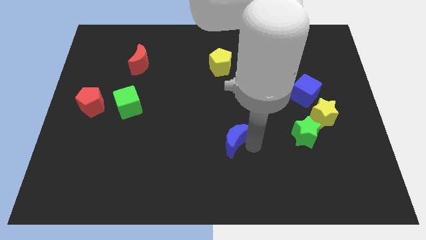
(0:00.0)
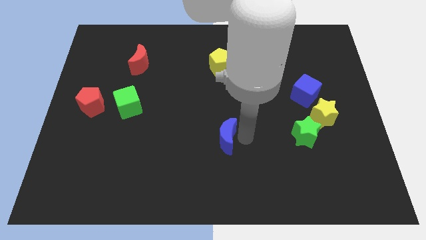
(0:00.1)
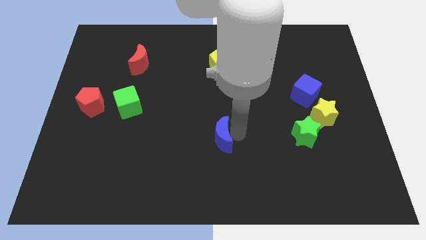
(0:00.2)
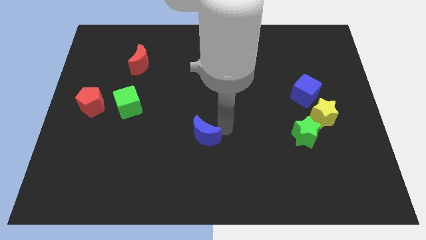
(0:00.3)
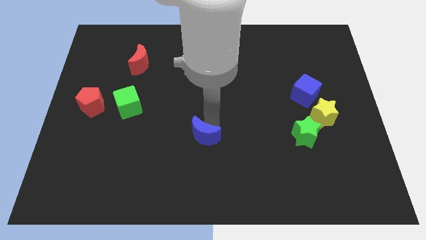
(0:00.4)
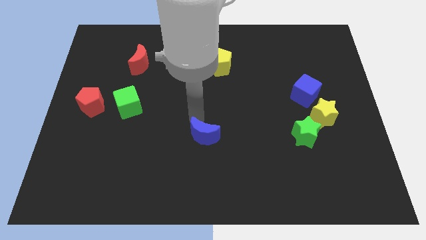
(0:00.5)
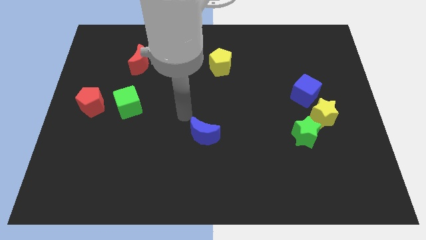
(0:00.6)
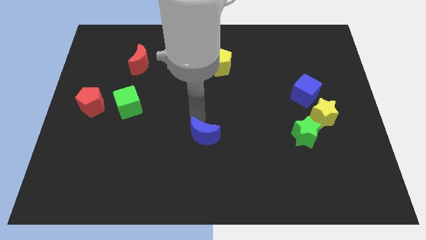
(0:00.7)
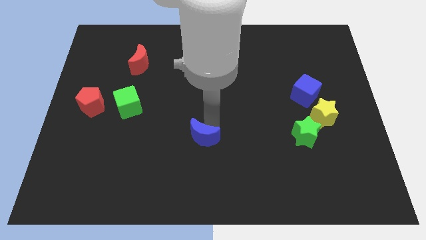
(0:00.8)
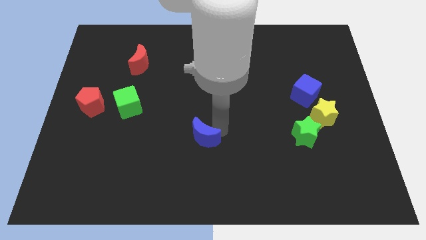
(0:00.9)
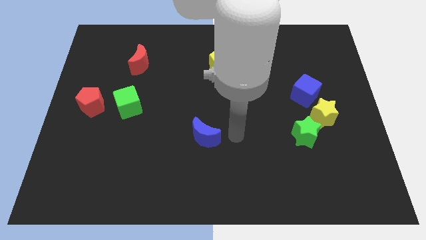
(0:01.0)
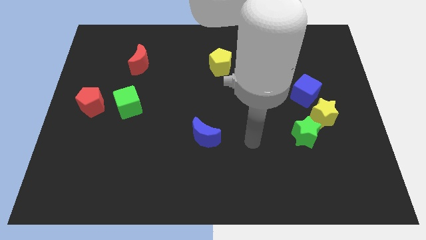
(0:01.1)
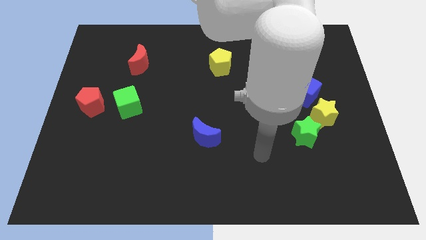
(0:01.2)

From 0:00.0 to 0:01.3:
push the blue crescent slightly to the left

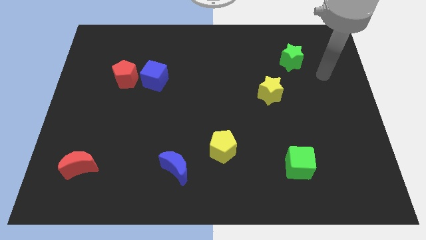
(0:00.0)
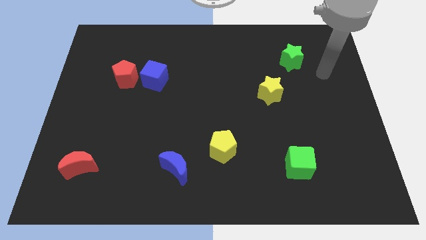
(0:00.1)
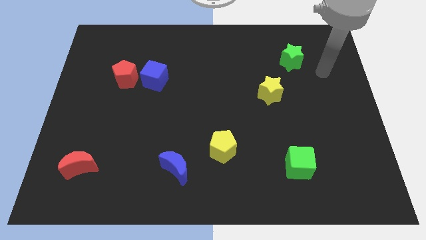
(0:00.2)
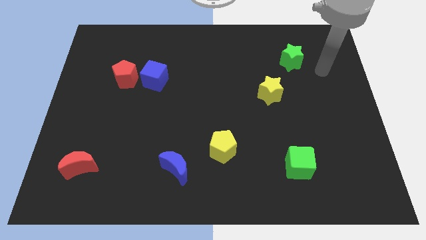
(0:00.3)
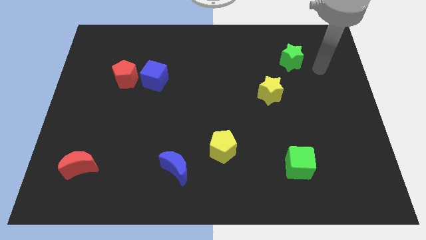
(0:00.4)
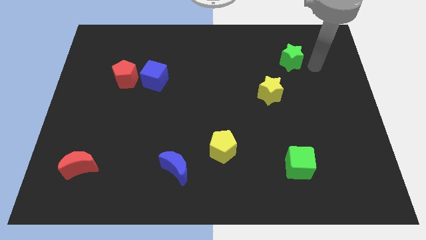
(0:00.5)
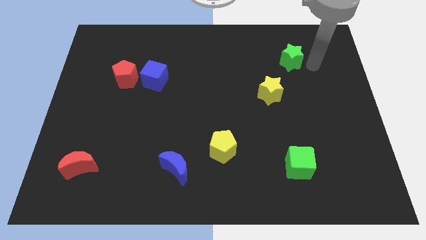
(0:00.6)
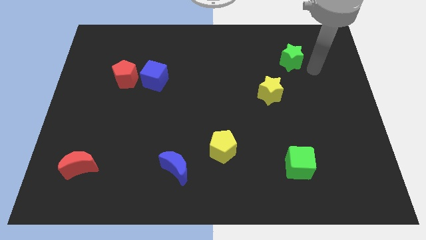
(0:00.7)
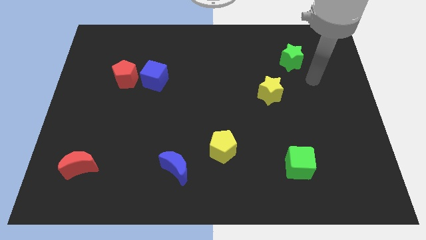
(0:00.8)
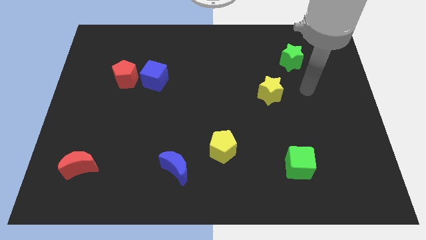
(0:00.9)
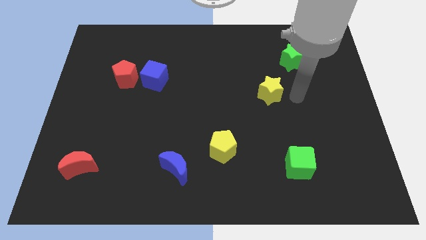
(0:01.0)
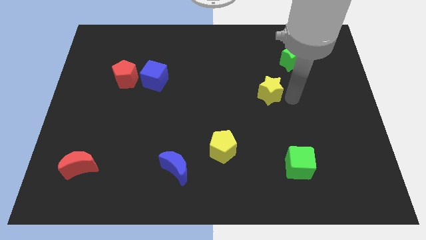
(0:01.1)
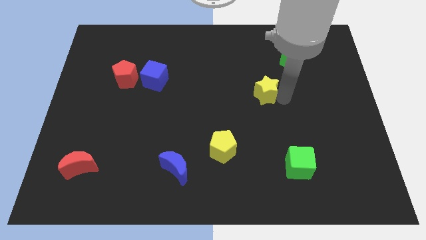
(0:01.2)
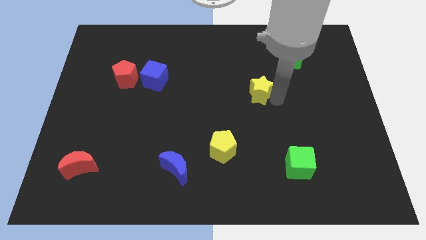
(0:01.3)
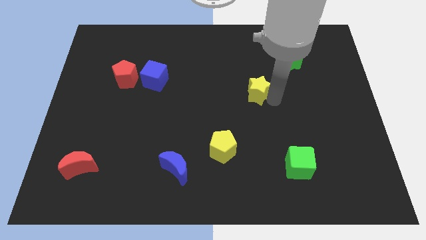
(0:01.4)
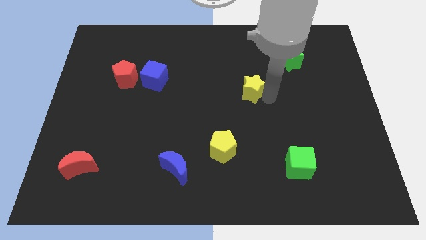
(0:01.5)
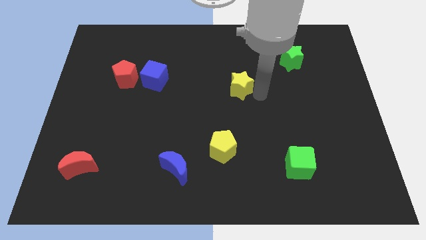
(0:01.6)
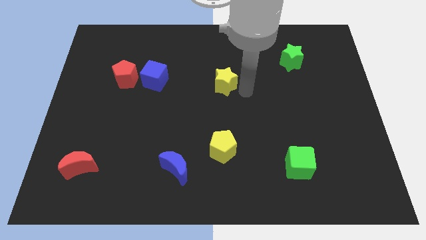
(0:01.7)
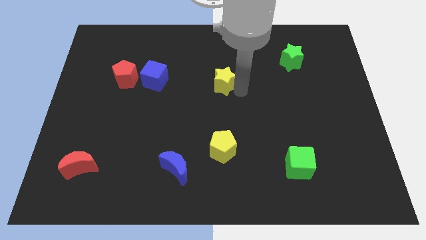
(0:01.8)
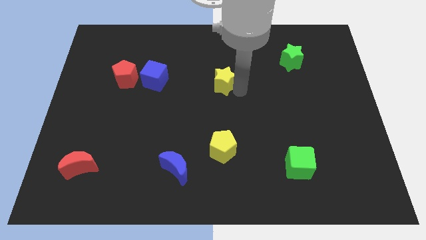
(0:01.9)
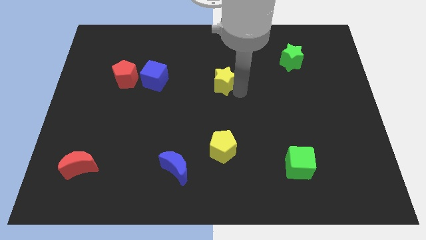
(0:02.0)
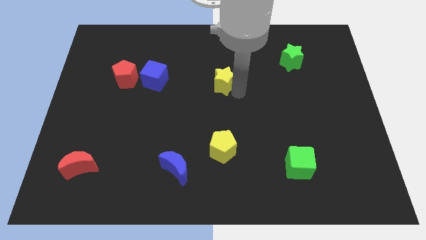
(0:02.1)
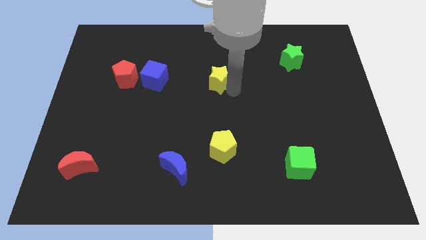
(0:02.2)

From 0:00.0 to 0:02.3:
move the yellow star above yellow pentagon

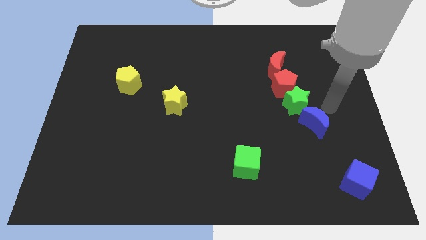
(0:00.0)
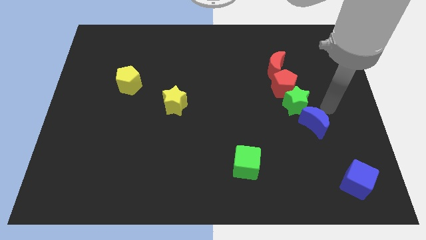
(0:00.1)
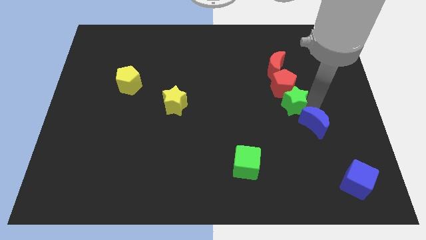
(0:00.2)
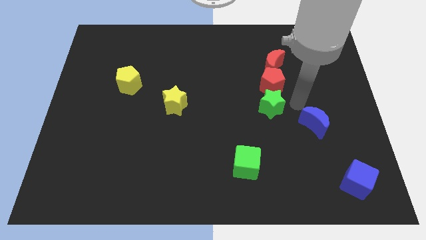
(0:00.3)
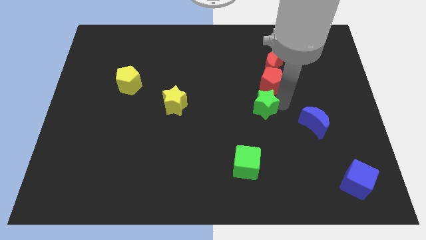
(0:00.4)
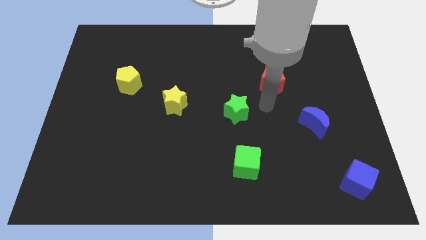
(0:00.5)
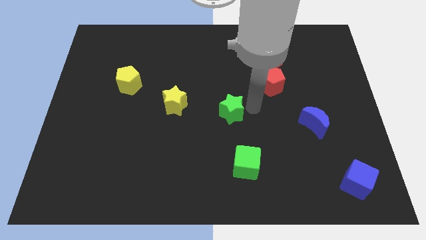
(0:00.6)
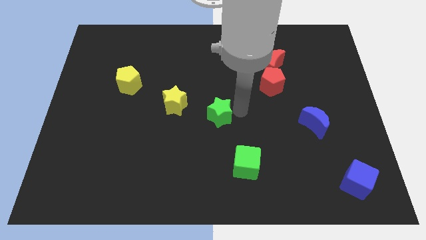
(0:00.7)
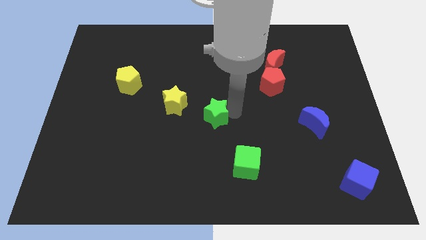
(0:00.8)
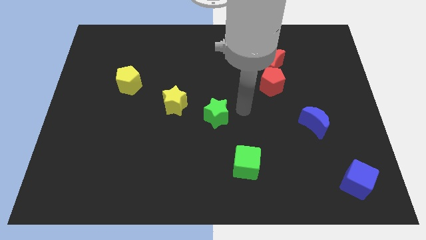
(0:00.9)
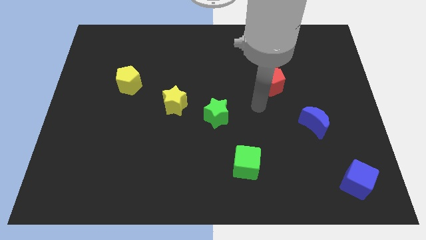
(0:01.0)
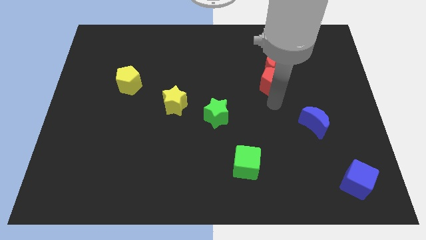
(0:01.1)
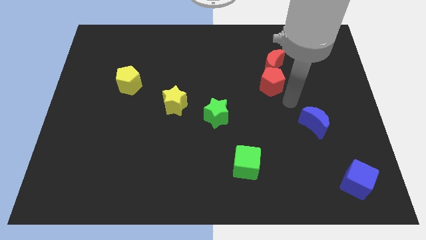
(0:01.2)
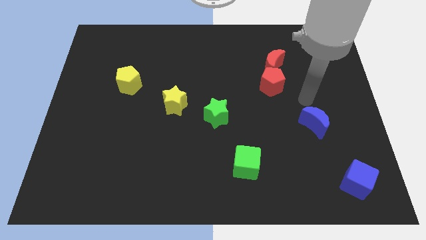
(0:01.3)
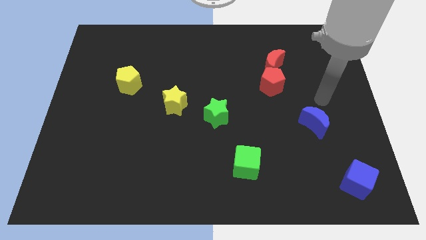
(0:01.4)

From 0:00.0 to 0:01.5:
move the green star to the right side of the yellow star

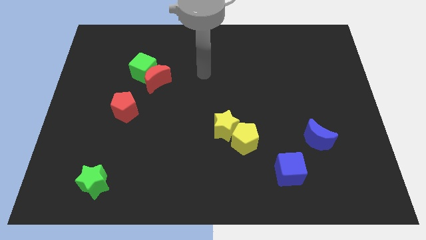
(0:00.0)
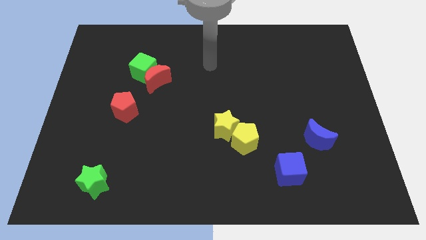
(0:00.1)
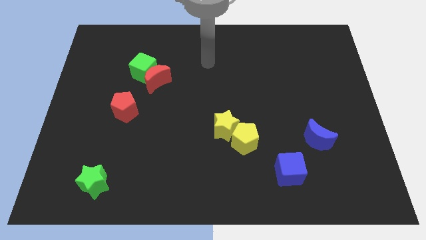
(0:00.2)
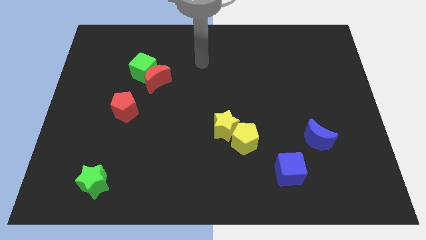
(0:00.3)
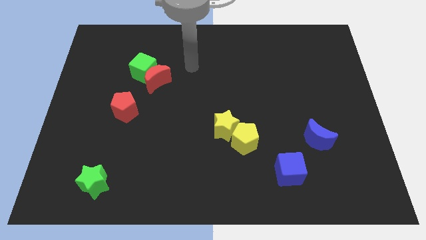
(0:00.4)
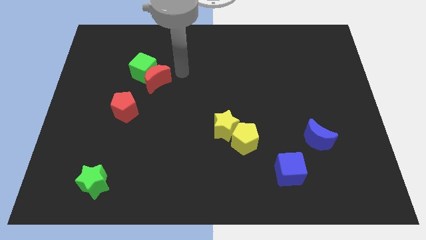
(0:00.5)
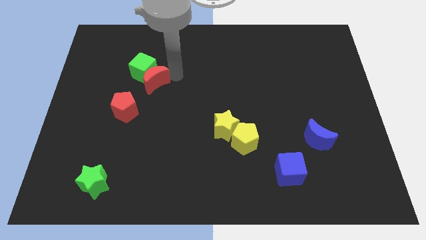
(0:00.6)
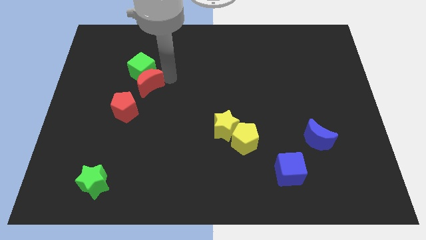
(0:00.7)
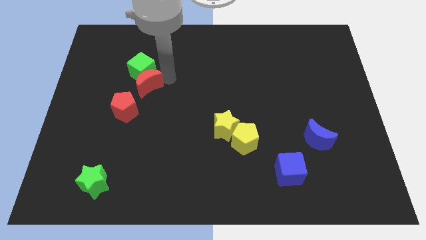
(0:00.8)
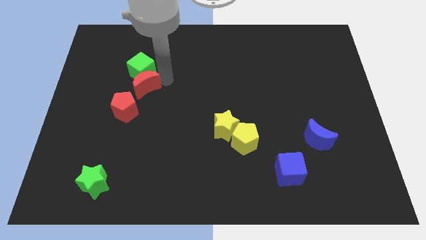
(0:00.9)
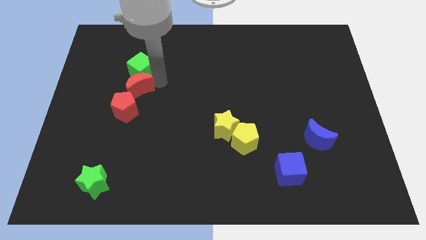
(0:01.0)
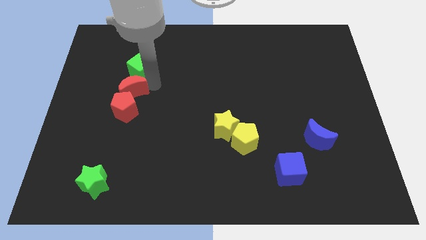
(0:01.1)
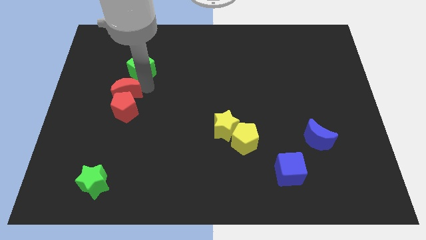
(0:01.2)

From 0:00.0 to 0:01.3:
place the red crescent diagonally in between the green cube and red pentagon

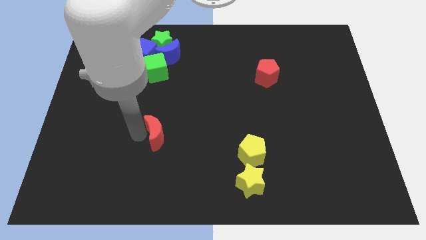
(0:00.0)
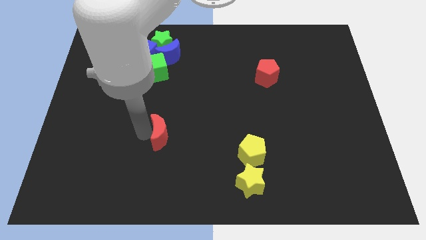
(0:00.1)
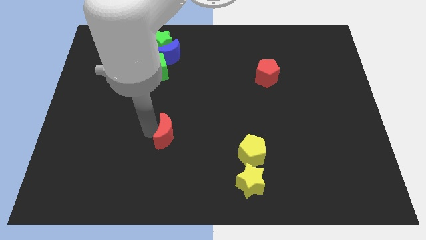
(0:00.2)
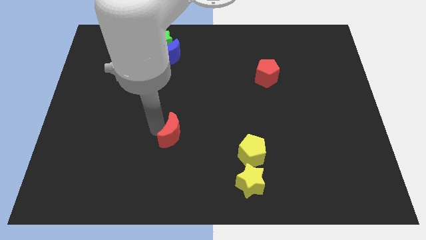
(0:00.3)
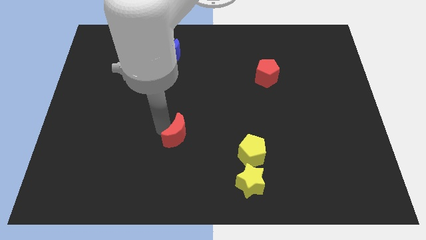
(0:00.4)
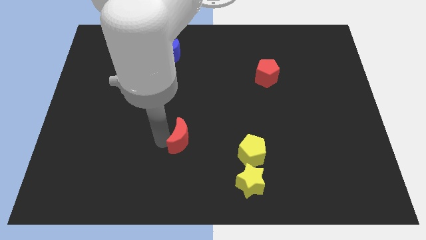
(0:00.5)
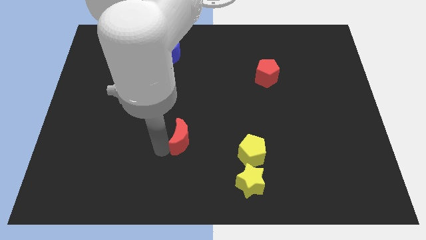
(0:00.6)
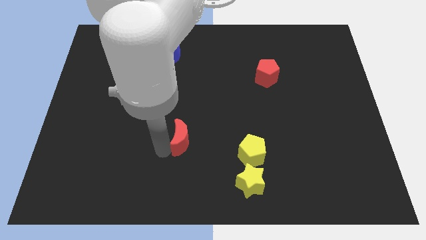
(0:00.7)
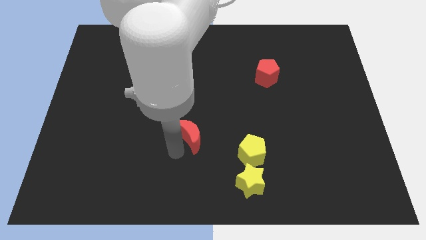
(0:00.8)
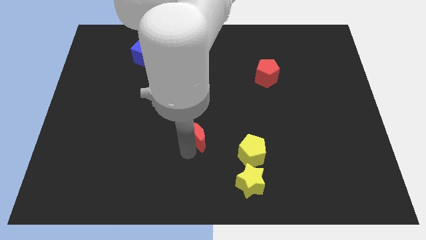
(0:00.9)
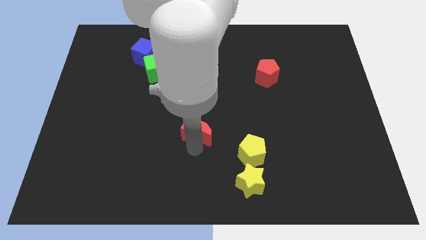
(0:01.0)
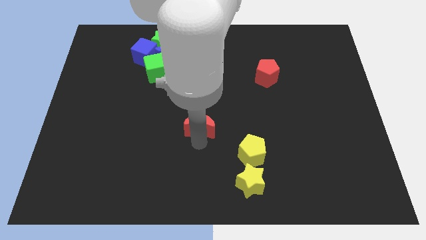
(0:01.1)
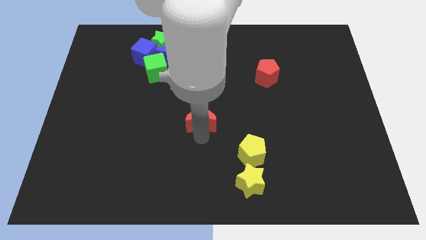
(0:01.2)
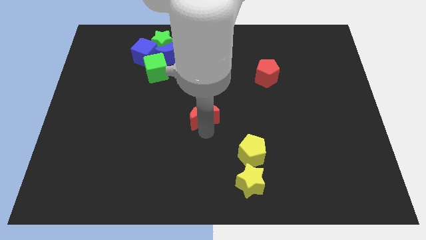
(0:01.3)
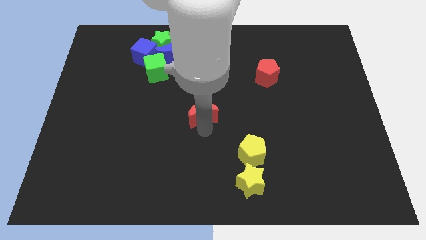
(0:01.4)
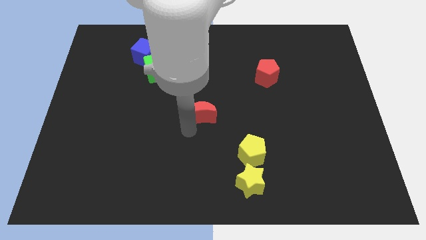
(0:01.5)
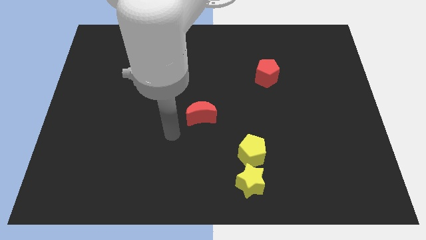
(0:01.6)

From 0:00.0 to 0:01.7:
move the red moon slightly towards the center

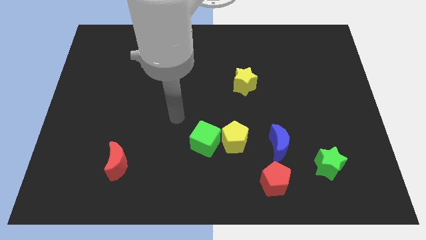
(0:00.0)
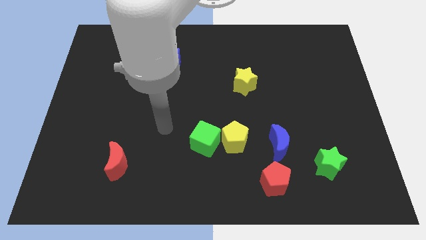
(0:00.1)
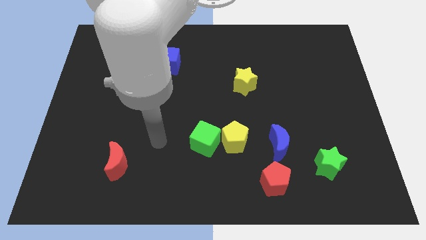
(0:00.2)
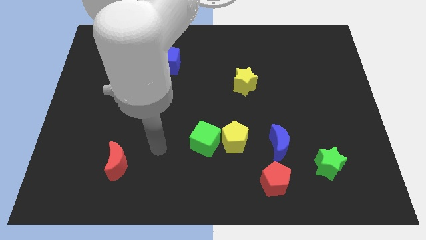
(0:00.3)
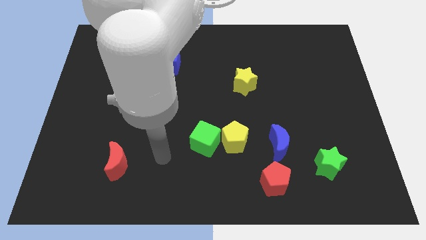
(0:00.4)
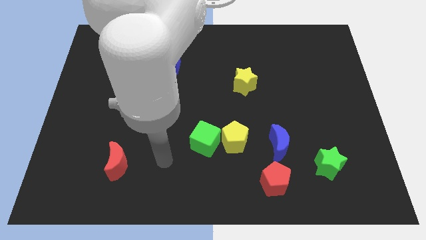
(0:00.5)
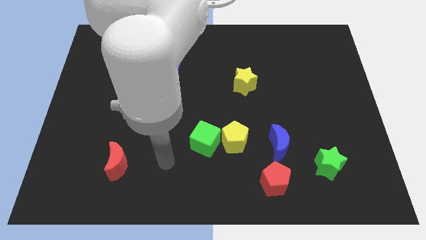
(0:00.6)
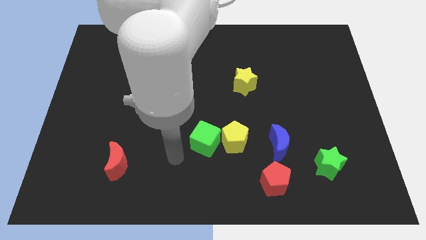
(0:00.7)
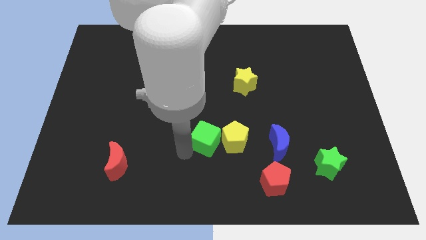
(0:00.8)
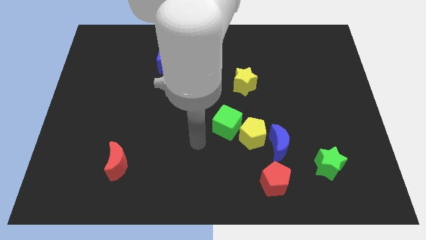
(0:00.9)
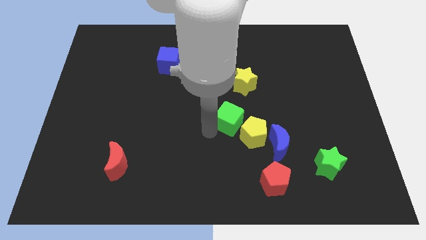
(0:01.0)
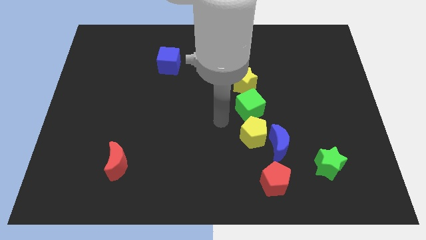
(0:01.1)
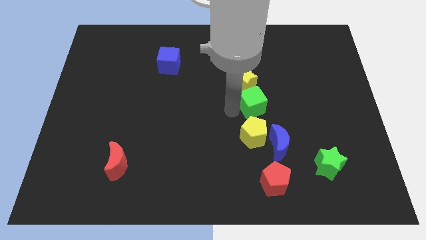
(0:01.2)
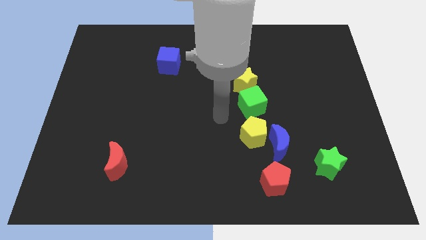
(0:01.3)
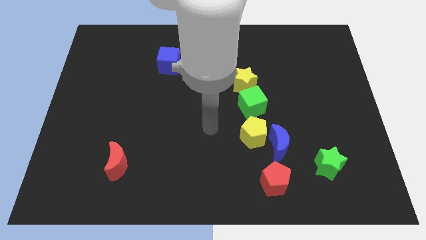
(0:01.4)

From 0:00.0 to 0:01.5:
place green cube in between two yellow blocks
